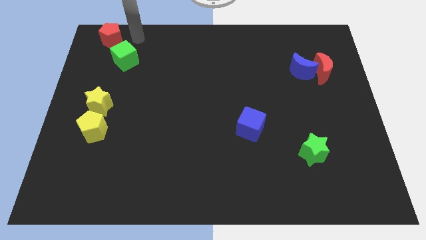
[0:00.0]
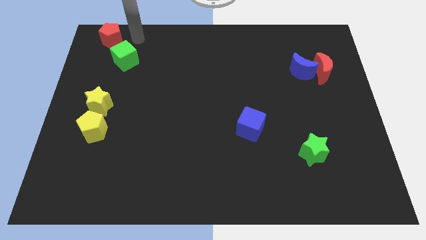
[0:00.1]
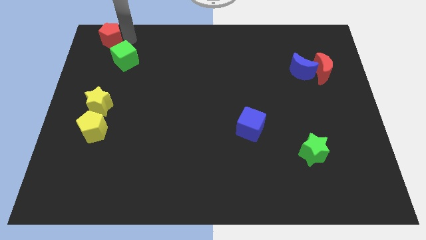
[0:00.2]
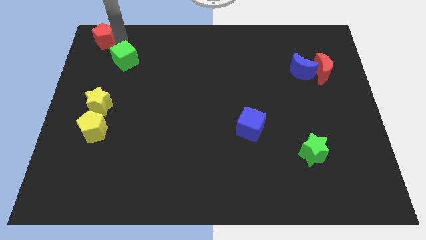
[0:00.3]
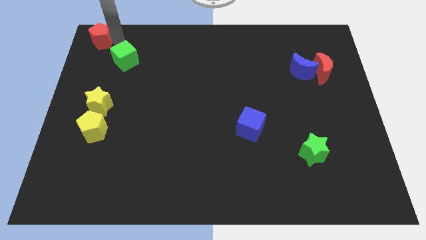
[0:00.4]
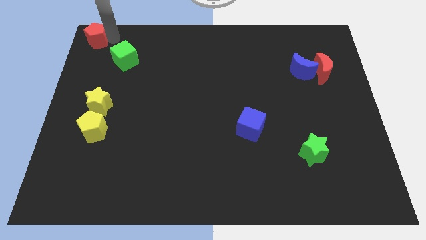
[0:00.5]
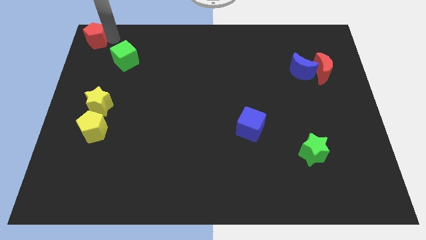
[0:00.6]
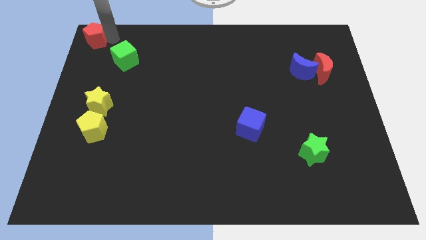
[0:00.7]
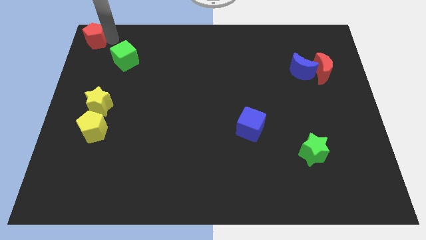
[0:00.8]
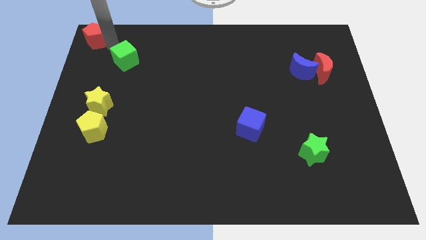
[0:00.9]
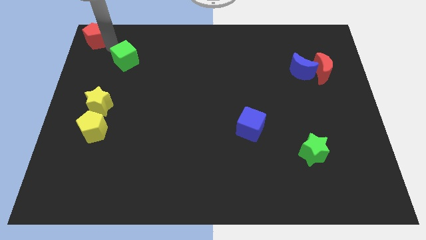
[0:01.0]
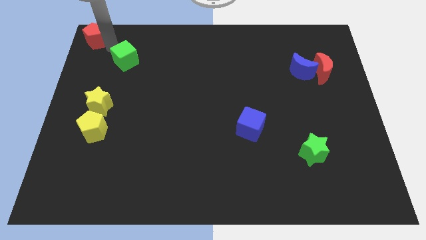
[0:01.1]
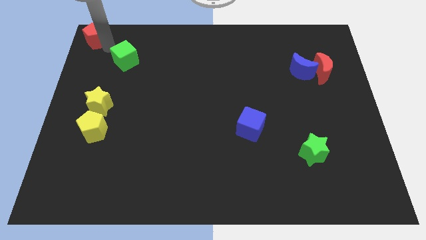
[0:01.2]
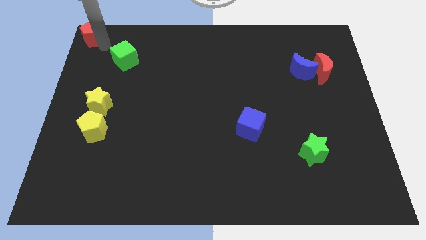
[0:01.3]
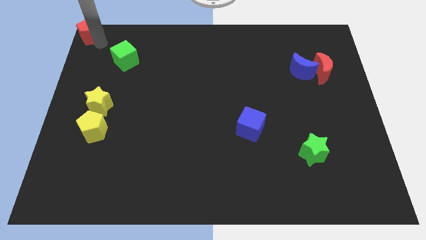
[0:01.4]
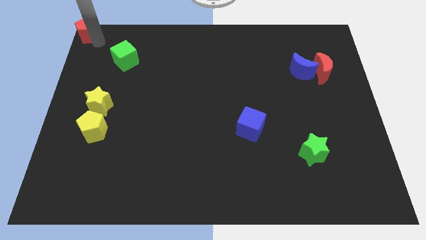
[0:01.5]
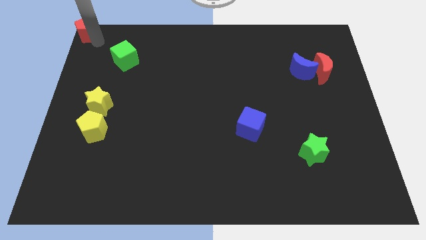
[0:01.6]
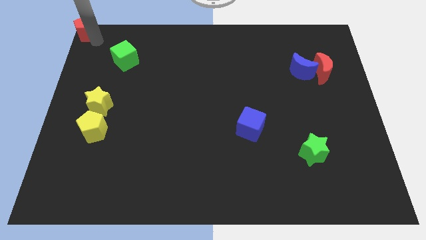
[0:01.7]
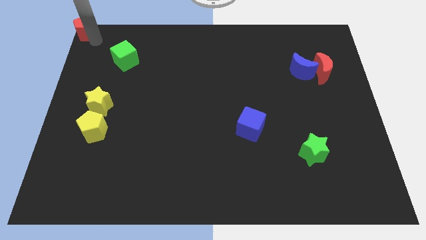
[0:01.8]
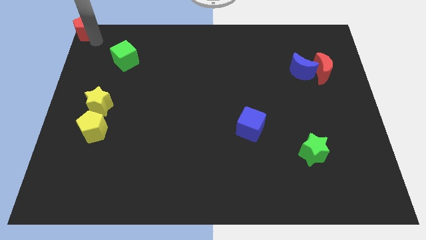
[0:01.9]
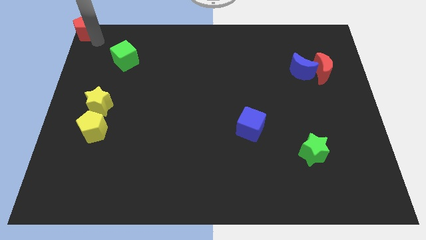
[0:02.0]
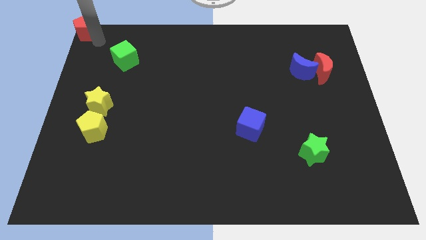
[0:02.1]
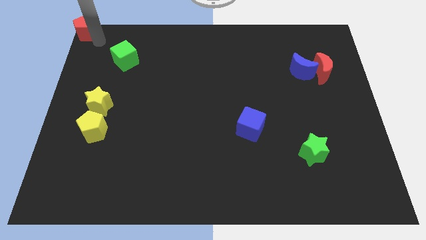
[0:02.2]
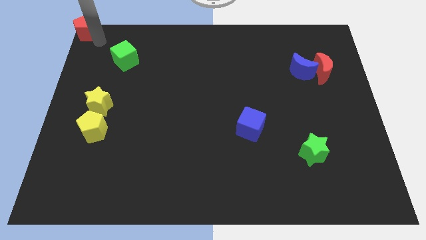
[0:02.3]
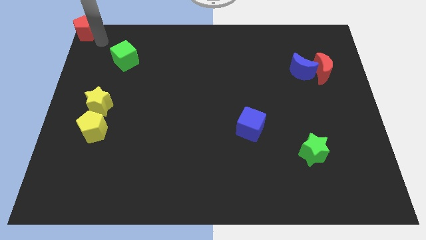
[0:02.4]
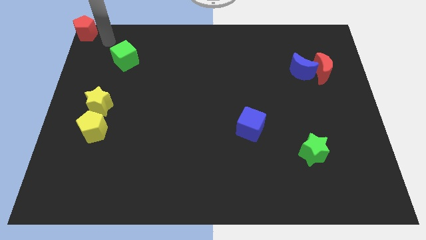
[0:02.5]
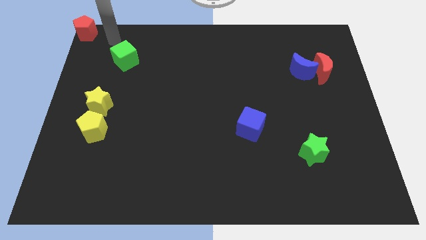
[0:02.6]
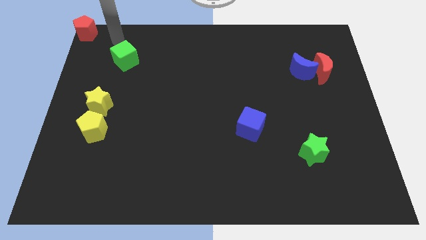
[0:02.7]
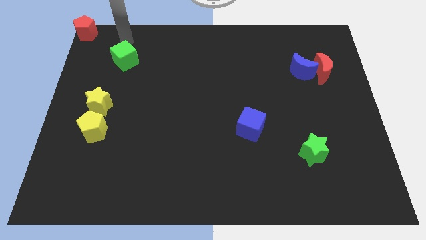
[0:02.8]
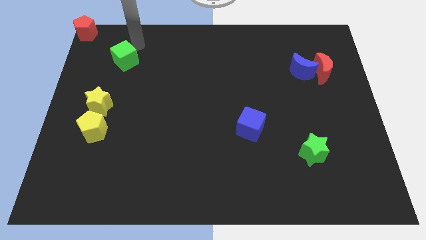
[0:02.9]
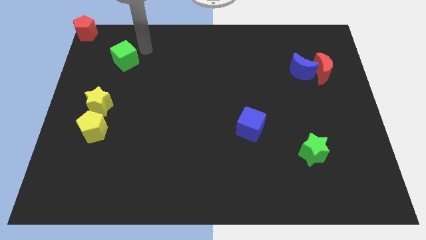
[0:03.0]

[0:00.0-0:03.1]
push red pentagon towards top left corner of the board

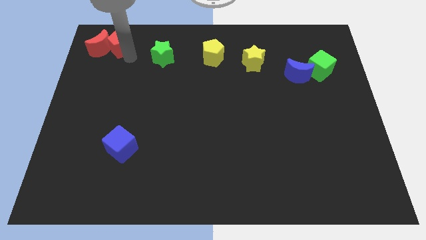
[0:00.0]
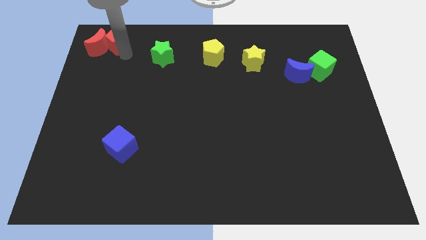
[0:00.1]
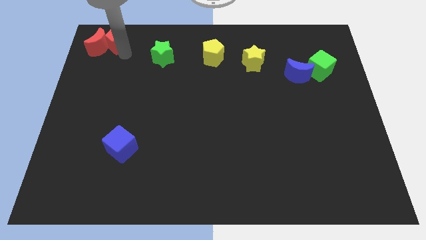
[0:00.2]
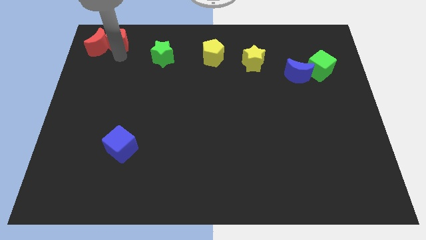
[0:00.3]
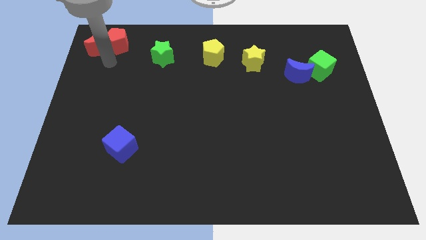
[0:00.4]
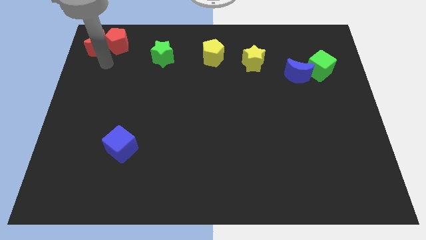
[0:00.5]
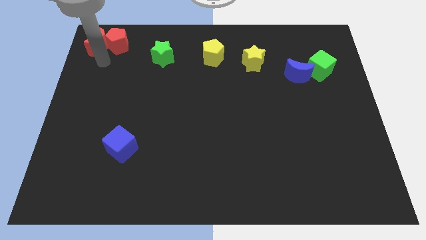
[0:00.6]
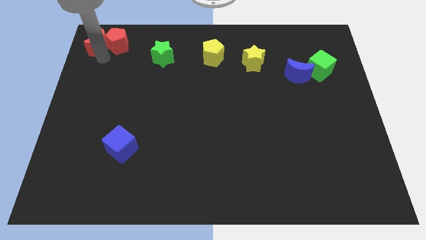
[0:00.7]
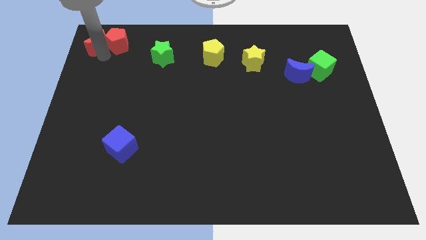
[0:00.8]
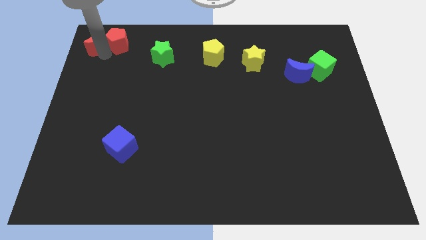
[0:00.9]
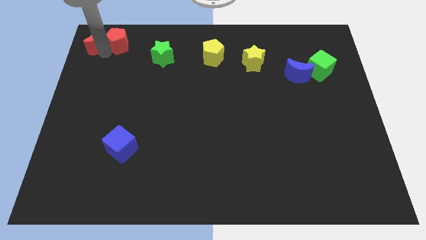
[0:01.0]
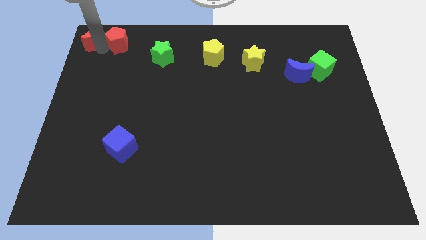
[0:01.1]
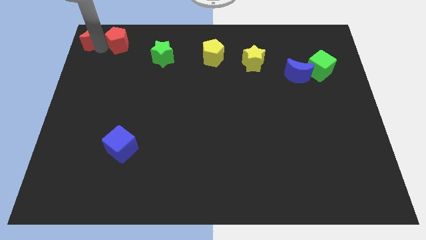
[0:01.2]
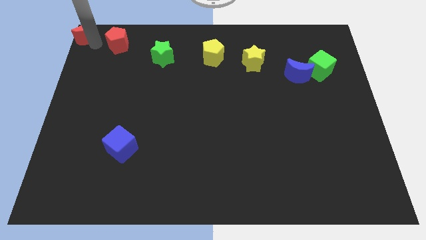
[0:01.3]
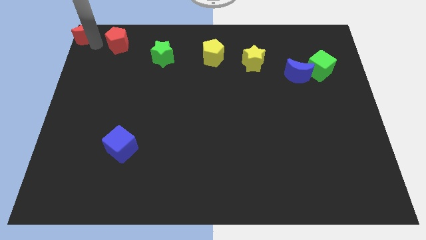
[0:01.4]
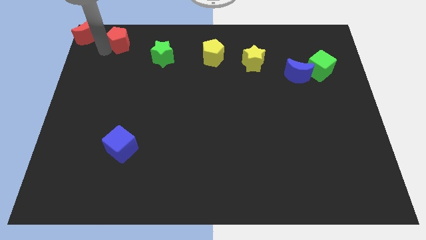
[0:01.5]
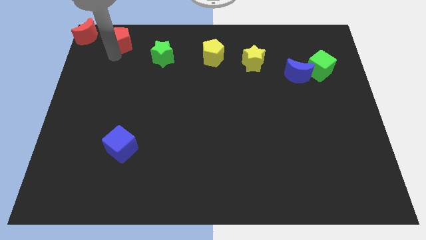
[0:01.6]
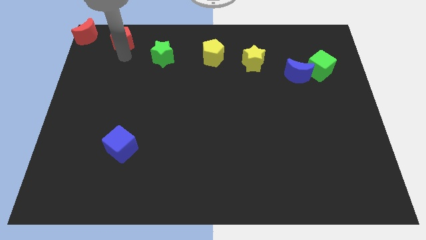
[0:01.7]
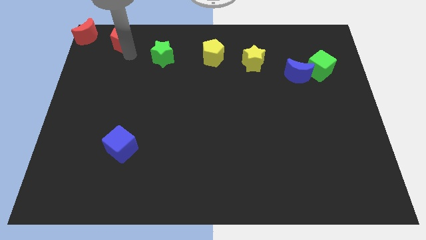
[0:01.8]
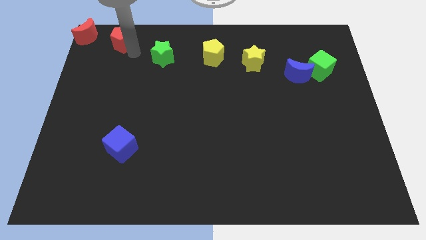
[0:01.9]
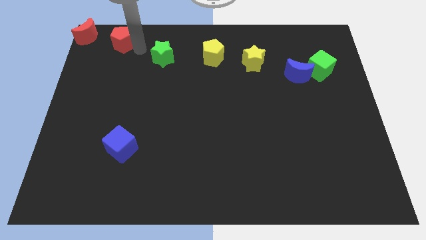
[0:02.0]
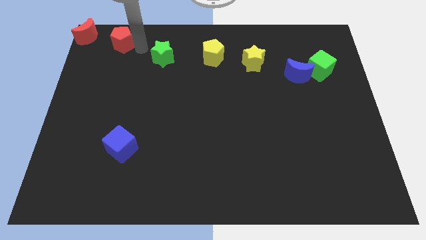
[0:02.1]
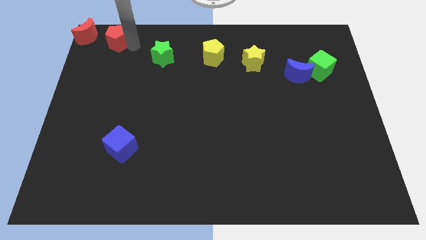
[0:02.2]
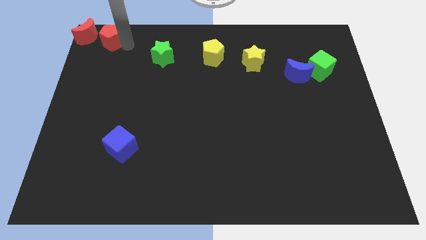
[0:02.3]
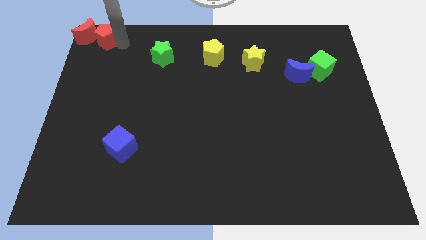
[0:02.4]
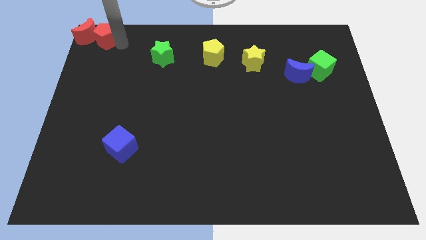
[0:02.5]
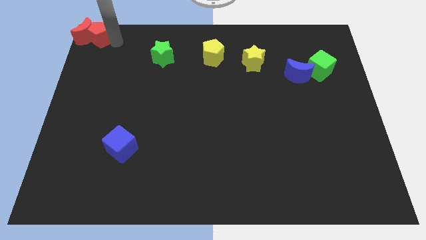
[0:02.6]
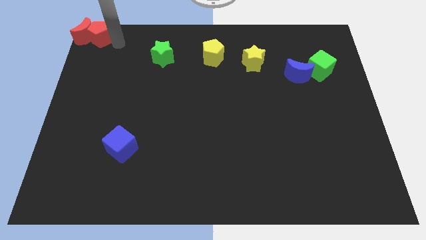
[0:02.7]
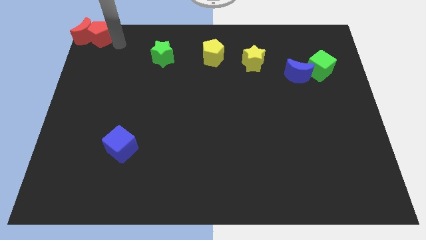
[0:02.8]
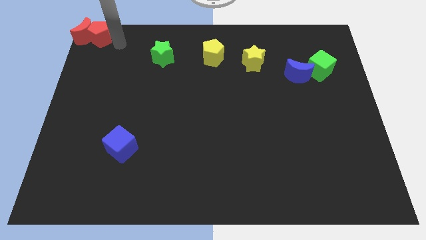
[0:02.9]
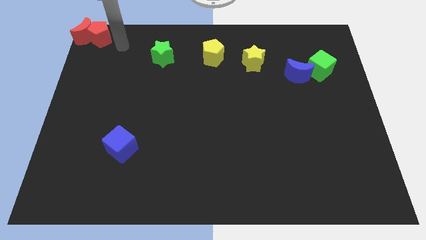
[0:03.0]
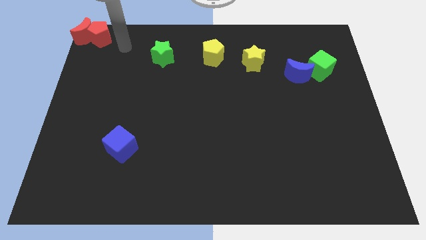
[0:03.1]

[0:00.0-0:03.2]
move the red blocks to the top left of the board

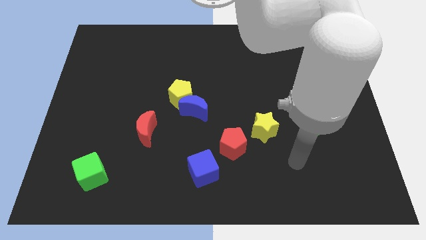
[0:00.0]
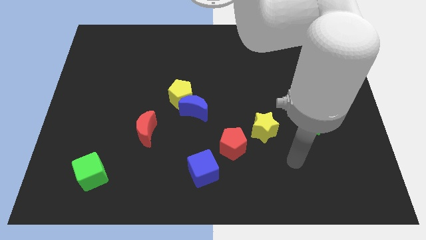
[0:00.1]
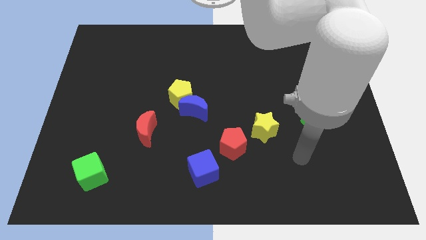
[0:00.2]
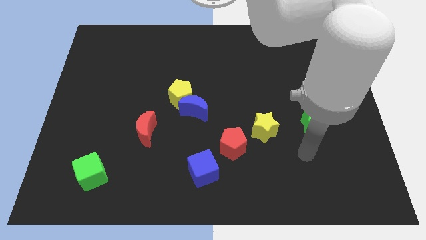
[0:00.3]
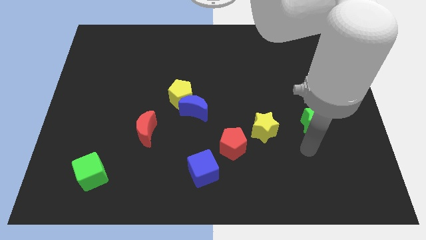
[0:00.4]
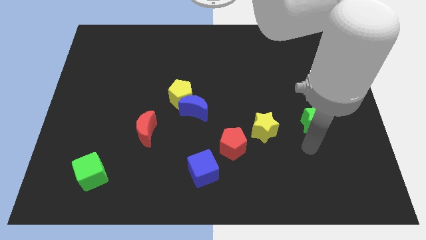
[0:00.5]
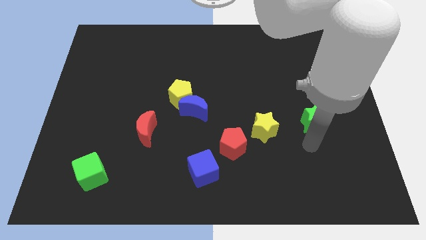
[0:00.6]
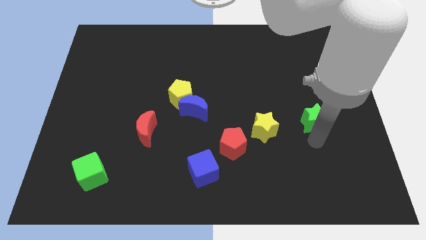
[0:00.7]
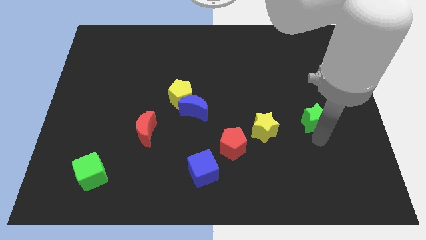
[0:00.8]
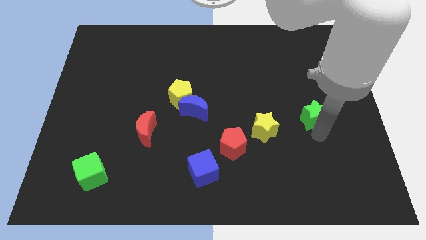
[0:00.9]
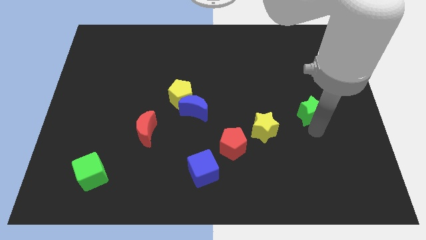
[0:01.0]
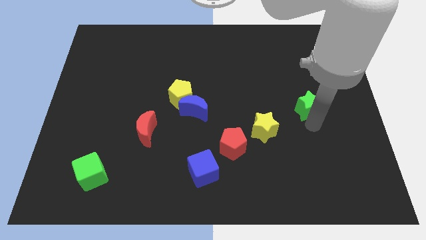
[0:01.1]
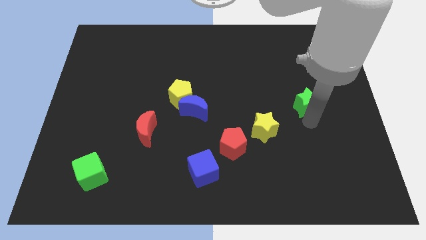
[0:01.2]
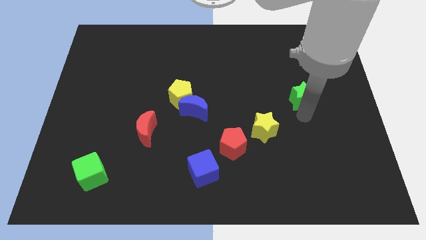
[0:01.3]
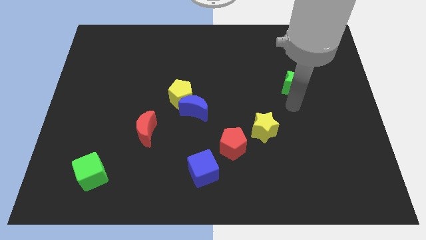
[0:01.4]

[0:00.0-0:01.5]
place green star to the top right of yellow star

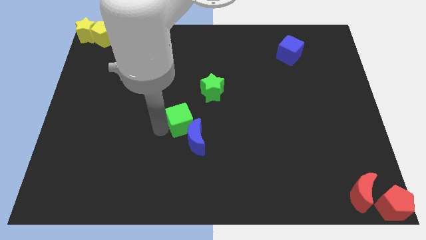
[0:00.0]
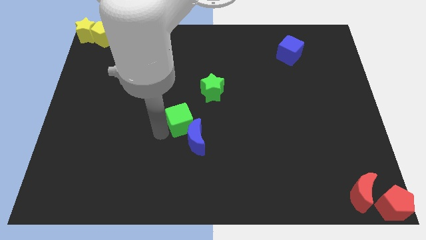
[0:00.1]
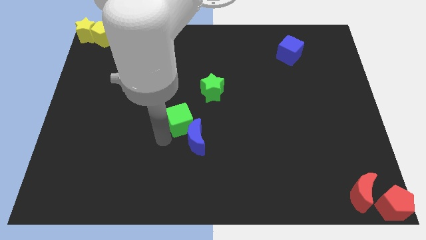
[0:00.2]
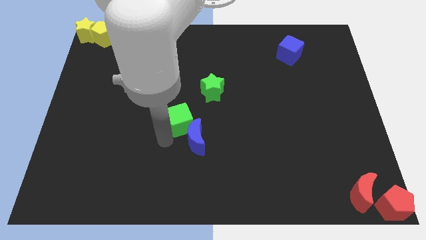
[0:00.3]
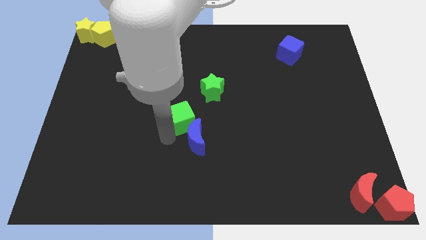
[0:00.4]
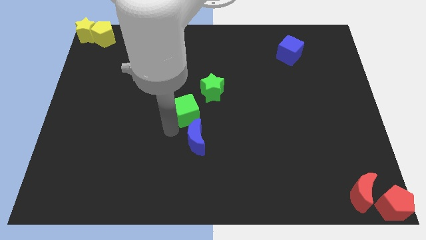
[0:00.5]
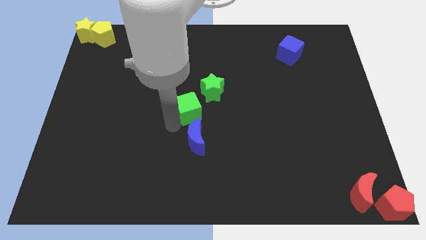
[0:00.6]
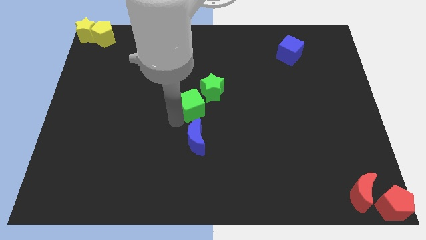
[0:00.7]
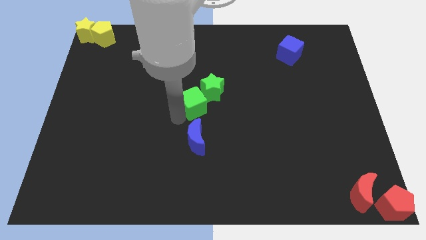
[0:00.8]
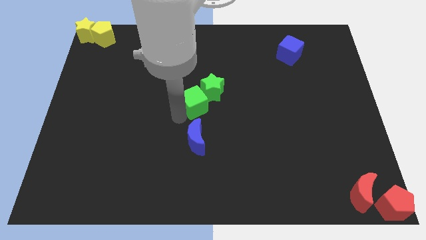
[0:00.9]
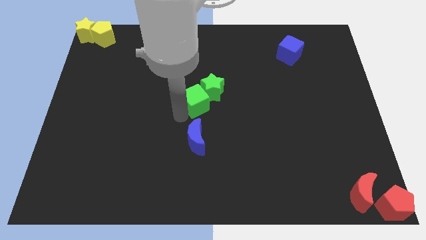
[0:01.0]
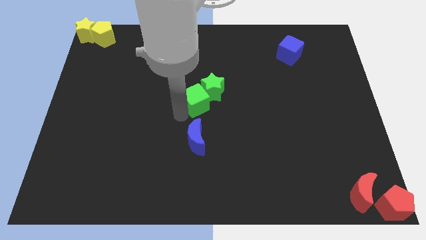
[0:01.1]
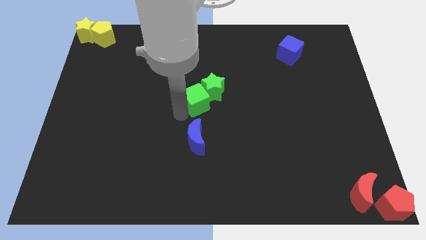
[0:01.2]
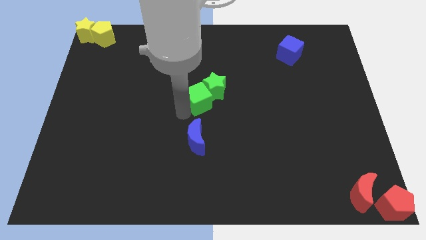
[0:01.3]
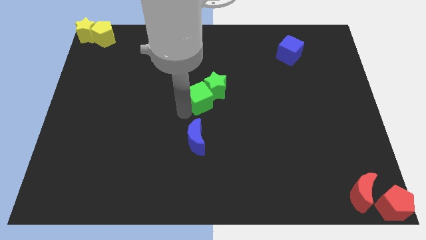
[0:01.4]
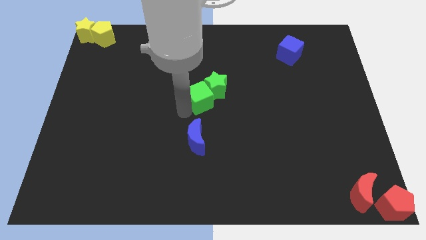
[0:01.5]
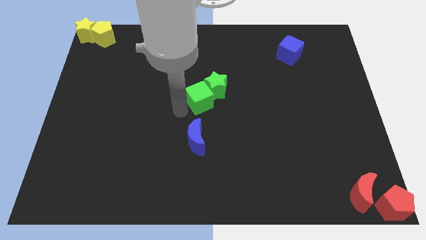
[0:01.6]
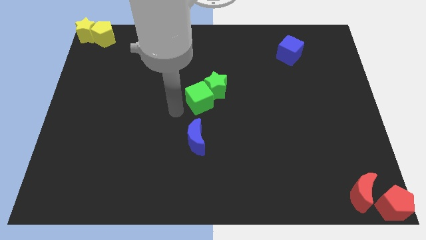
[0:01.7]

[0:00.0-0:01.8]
push the green star with green cube
